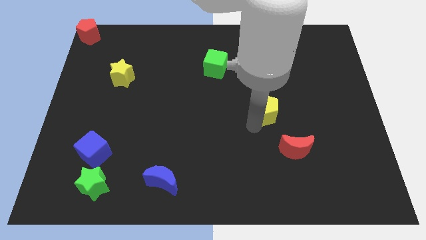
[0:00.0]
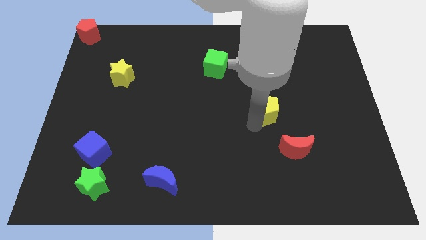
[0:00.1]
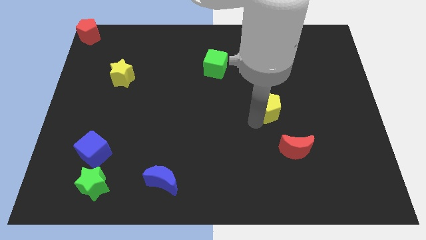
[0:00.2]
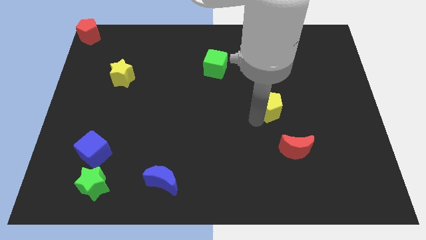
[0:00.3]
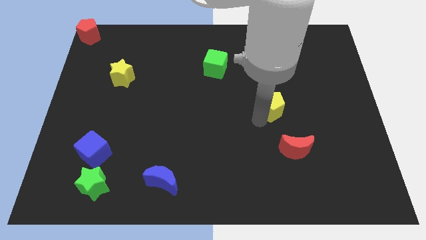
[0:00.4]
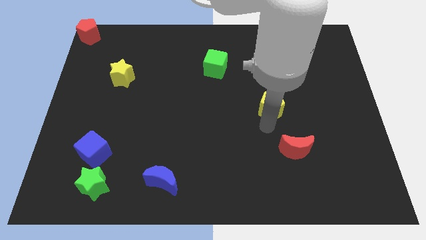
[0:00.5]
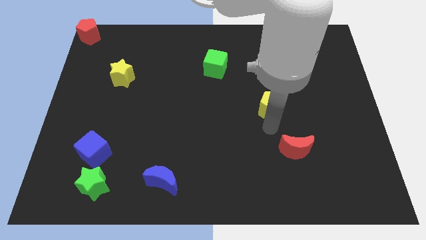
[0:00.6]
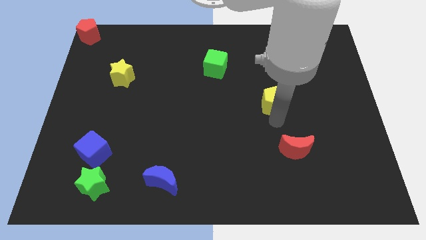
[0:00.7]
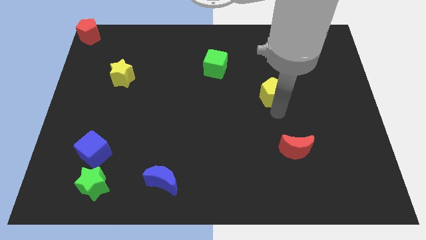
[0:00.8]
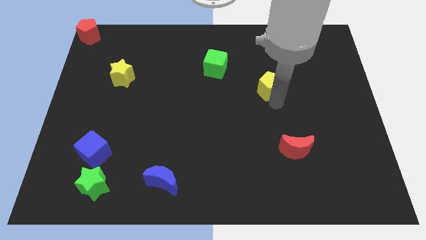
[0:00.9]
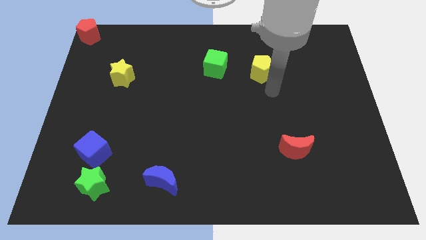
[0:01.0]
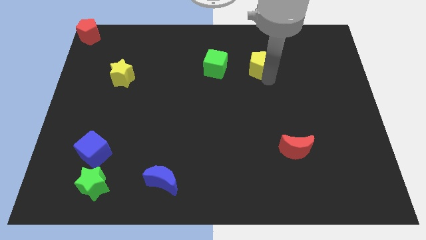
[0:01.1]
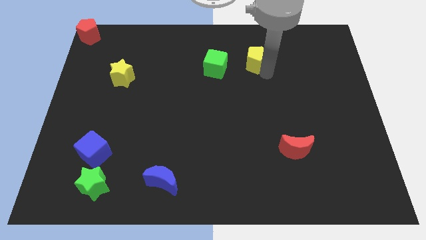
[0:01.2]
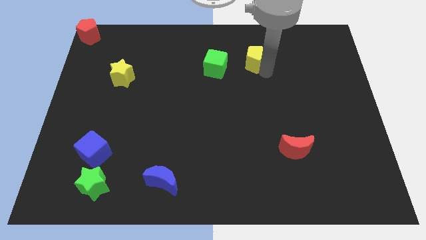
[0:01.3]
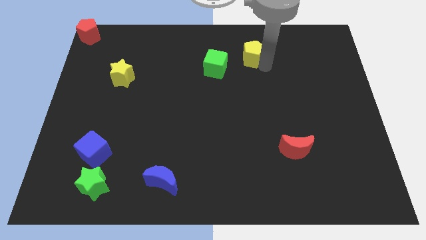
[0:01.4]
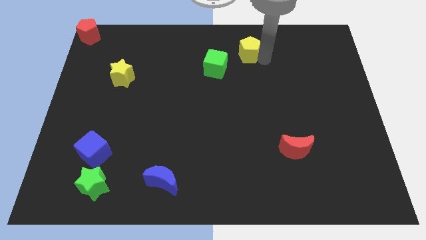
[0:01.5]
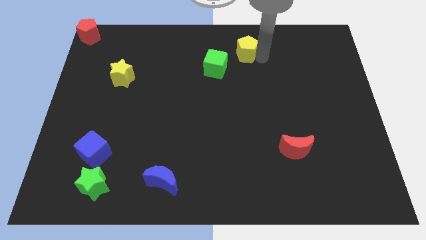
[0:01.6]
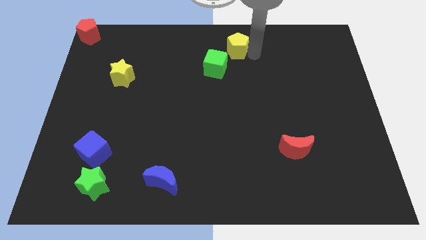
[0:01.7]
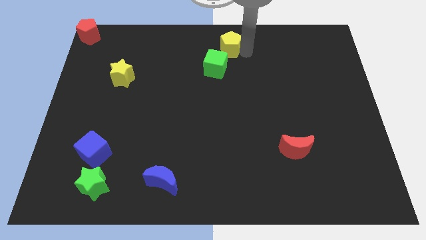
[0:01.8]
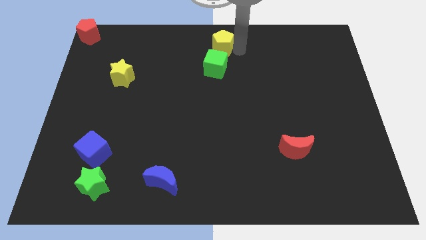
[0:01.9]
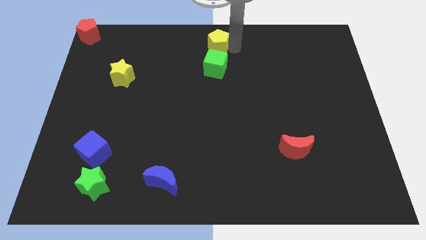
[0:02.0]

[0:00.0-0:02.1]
place the yellow pentagon above the green cube

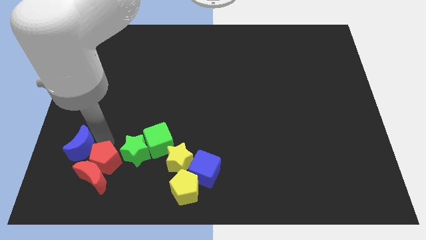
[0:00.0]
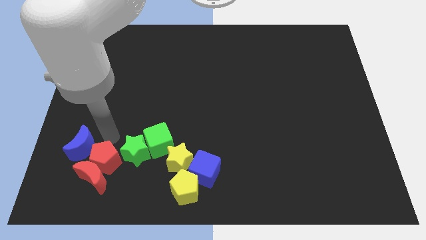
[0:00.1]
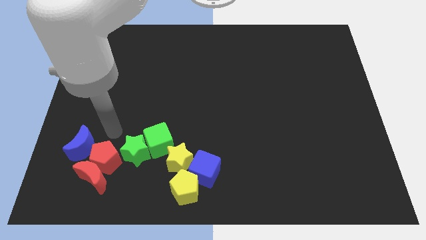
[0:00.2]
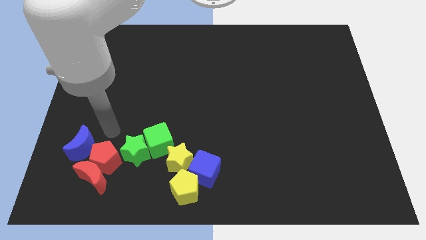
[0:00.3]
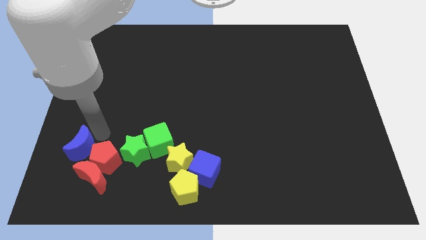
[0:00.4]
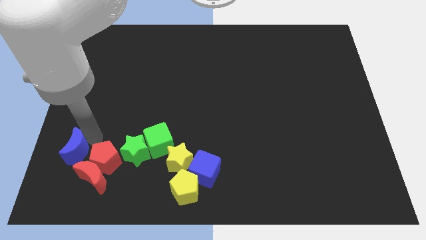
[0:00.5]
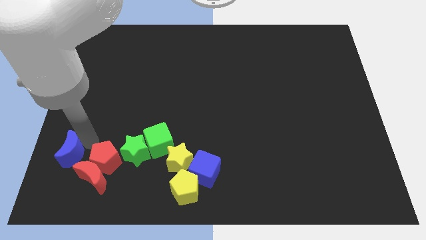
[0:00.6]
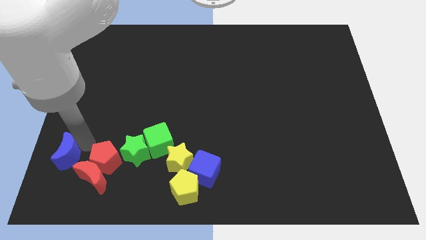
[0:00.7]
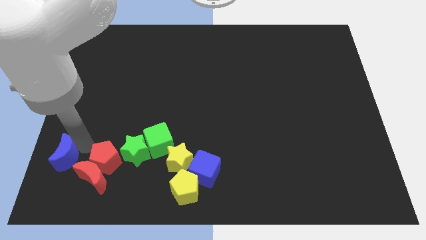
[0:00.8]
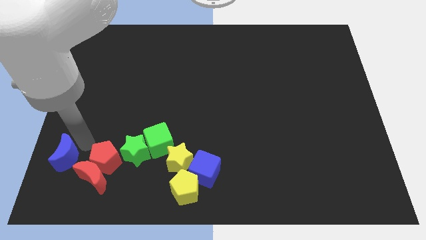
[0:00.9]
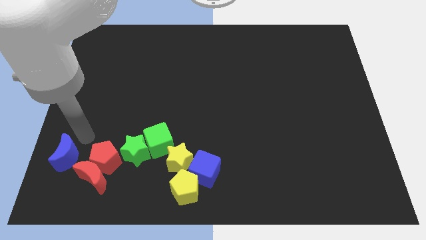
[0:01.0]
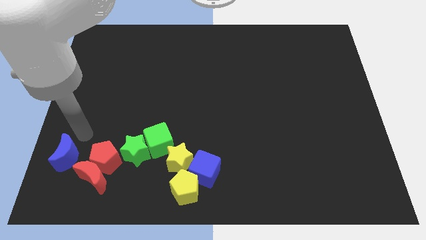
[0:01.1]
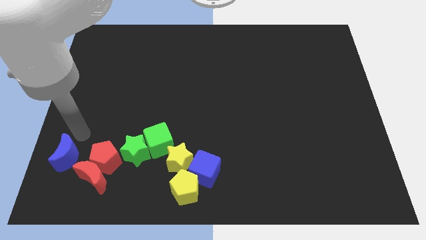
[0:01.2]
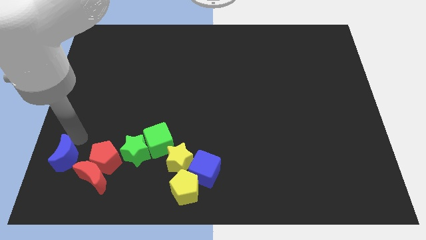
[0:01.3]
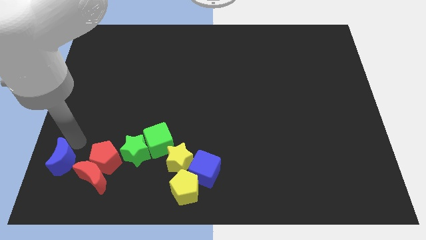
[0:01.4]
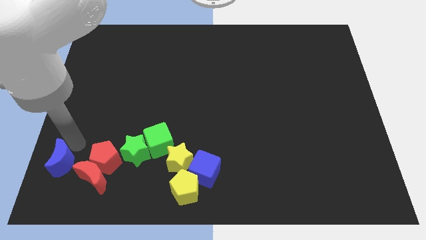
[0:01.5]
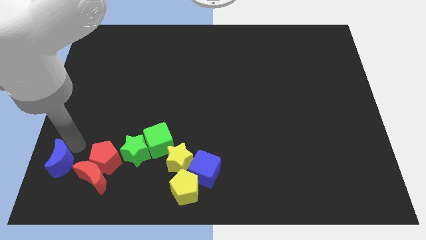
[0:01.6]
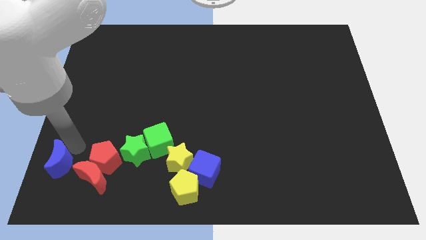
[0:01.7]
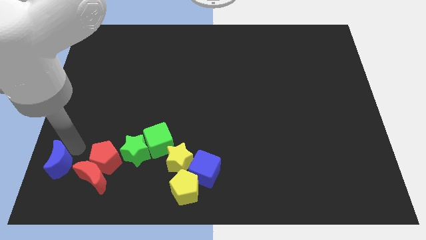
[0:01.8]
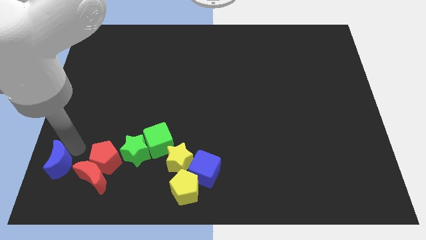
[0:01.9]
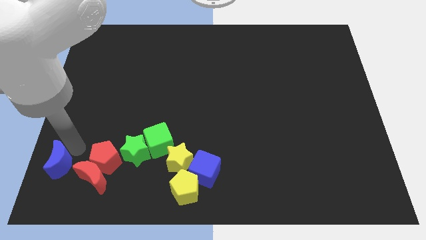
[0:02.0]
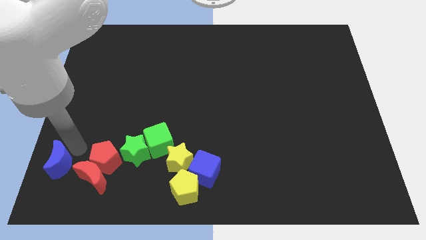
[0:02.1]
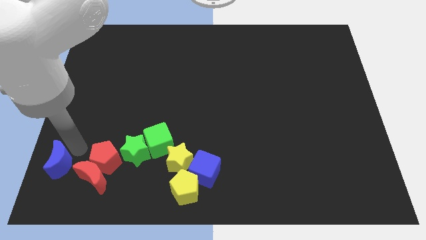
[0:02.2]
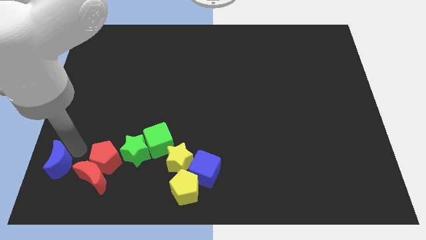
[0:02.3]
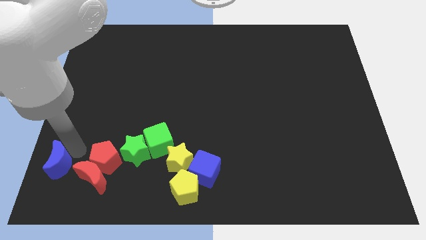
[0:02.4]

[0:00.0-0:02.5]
push the blue crescent away from the red pentagon

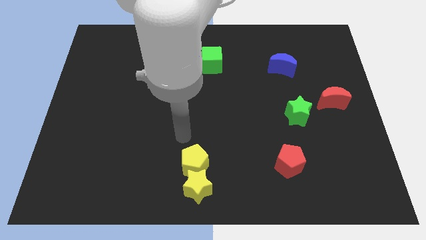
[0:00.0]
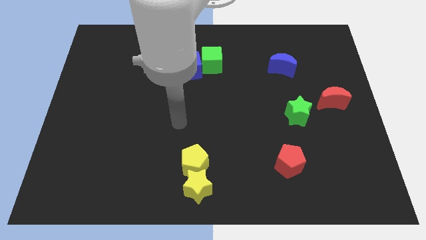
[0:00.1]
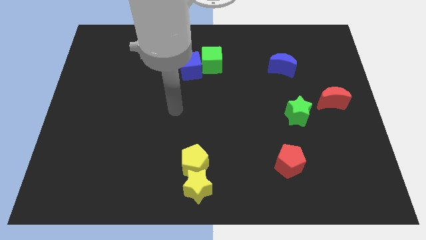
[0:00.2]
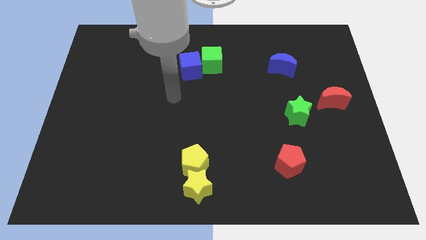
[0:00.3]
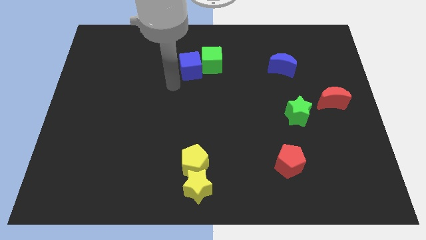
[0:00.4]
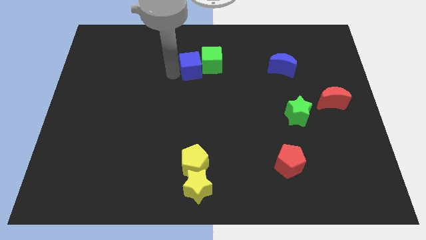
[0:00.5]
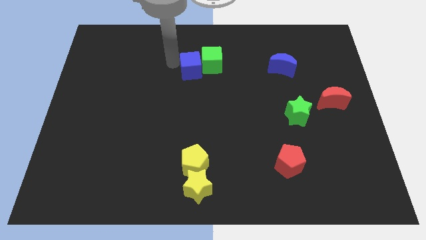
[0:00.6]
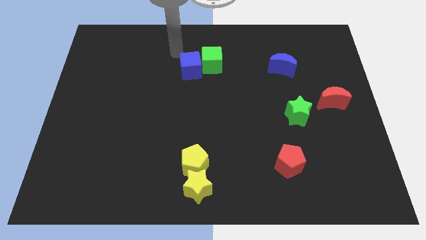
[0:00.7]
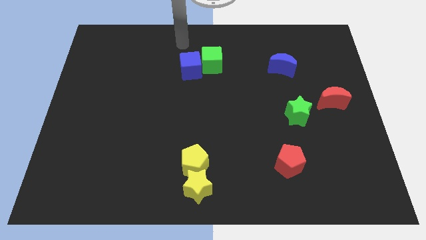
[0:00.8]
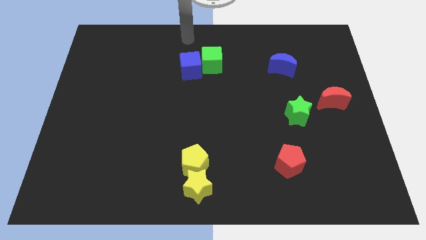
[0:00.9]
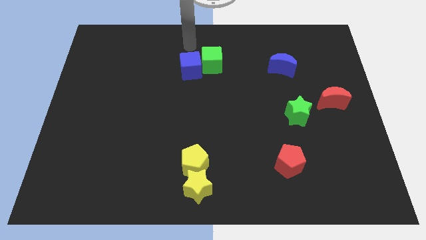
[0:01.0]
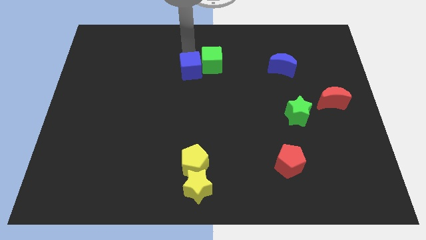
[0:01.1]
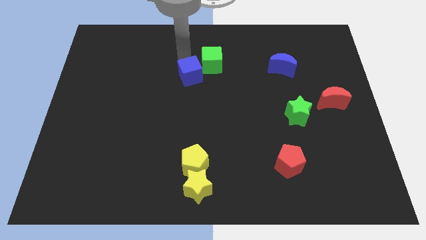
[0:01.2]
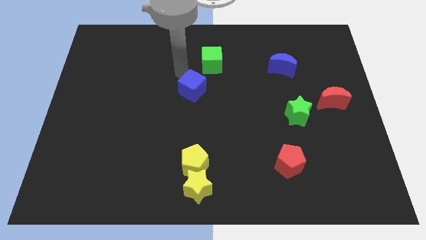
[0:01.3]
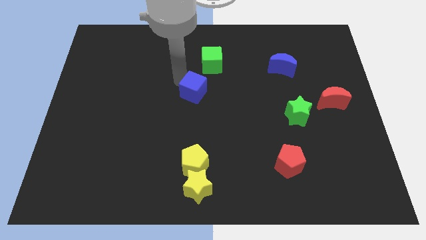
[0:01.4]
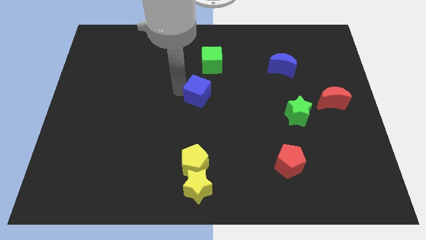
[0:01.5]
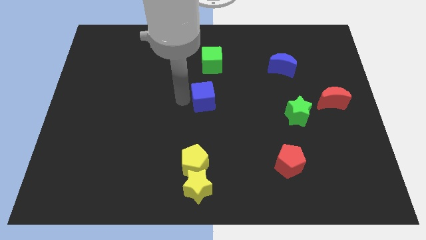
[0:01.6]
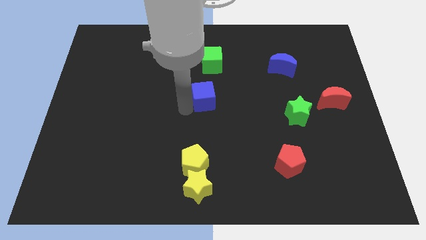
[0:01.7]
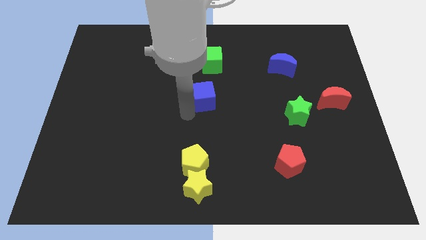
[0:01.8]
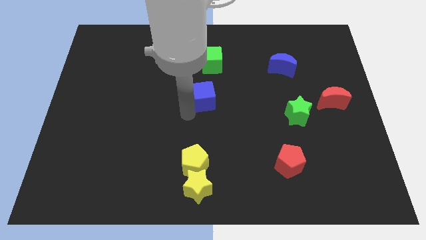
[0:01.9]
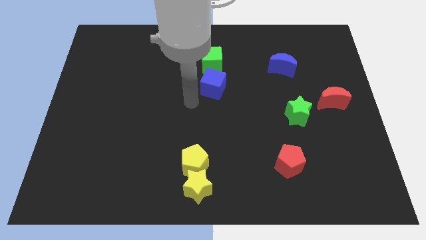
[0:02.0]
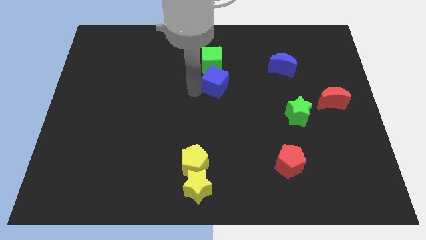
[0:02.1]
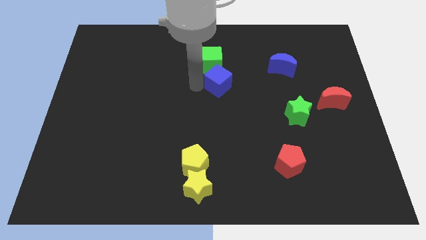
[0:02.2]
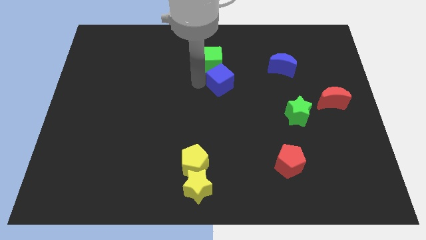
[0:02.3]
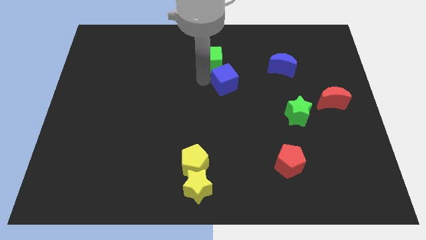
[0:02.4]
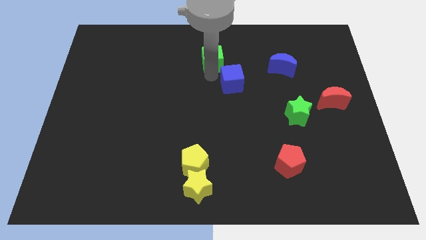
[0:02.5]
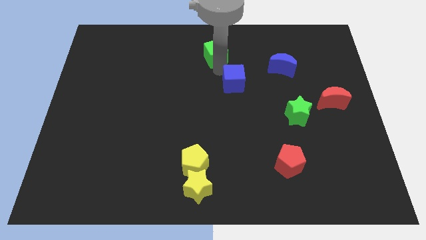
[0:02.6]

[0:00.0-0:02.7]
place the blue cube at the bottom right side of green cube

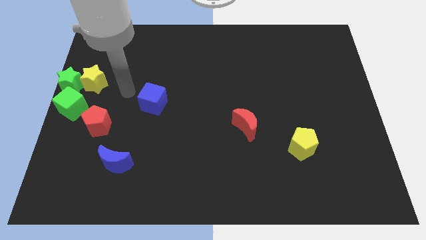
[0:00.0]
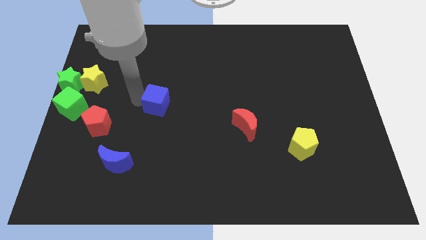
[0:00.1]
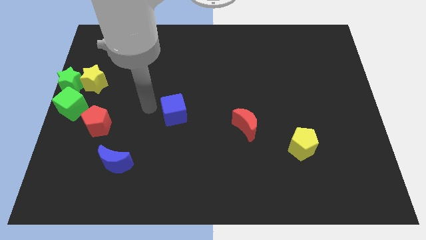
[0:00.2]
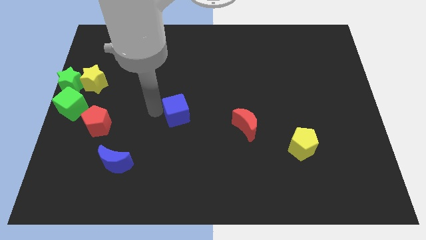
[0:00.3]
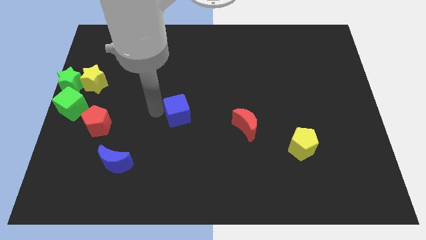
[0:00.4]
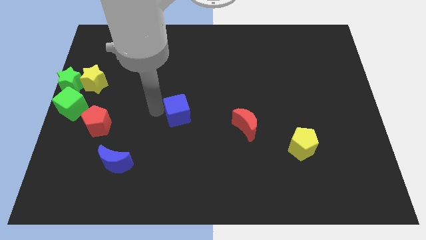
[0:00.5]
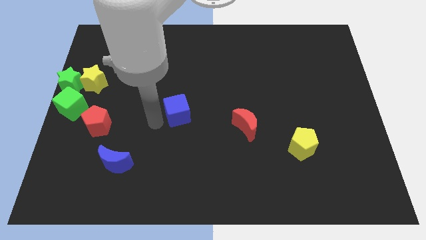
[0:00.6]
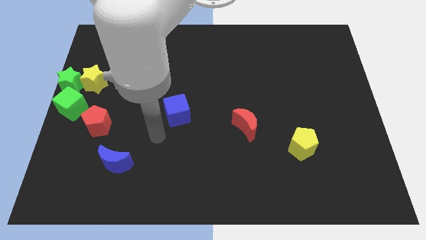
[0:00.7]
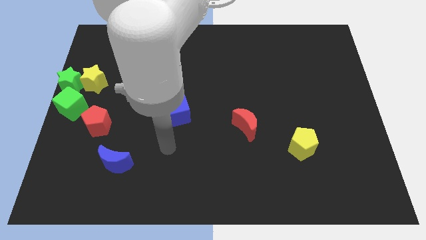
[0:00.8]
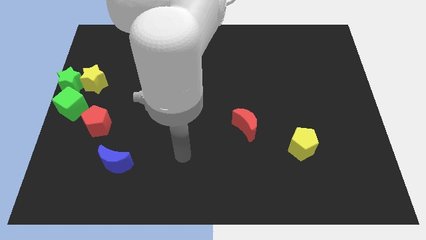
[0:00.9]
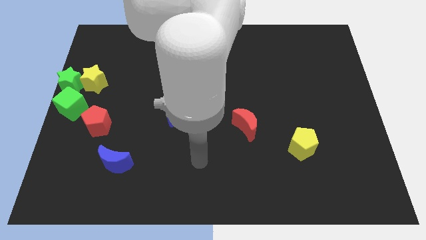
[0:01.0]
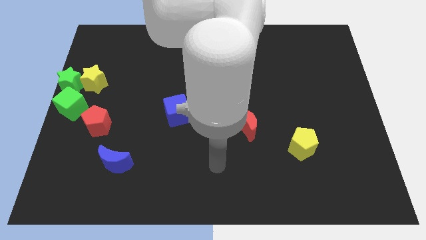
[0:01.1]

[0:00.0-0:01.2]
slide the blue cube towards the center of the board

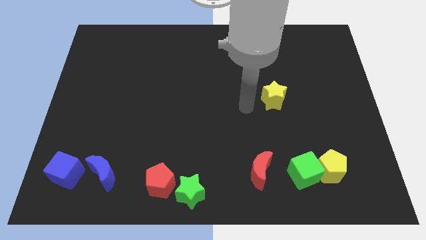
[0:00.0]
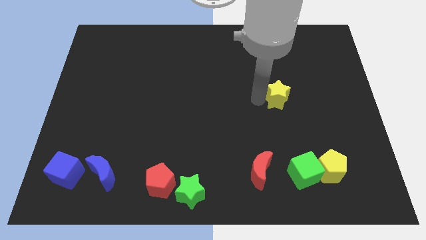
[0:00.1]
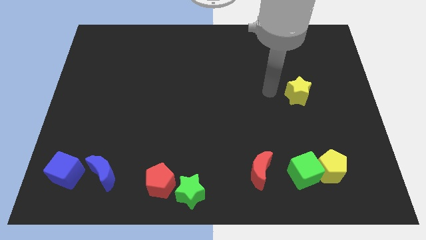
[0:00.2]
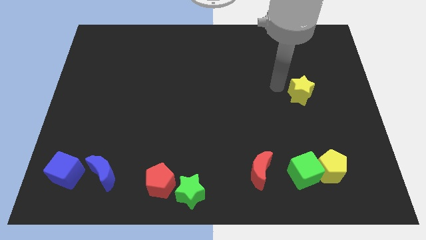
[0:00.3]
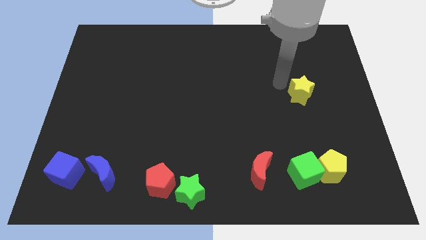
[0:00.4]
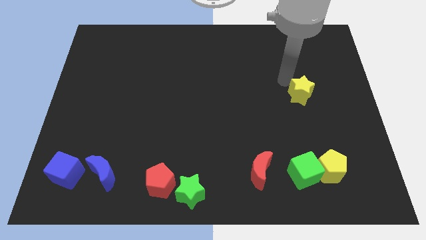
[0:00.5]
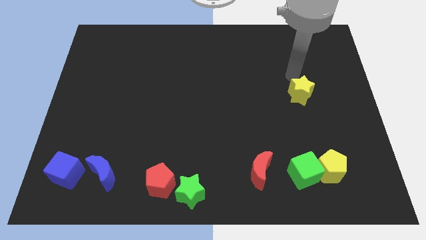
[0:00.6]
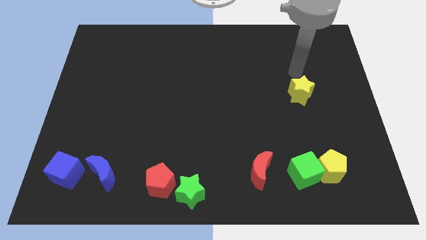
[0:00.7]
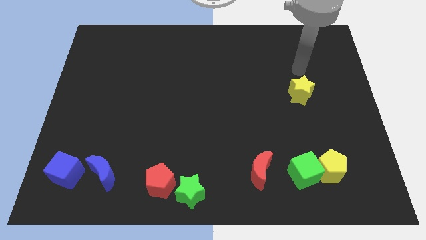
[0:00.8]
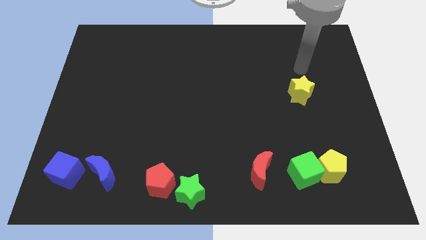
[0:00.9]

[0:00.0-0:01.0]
place the yellow star on top of the green cube
